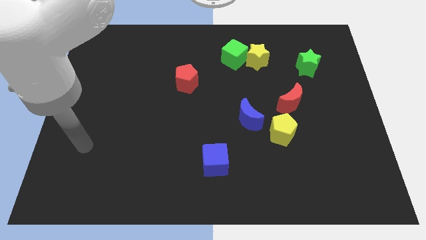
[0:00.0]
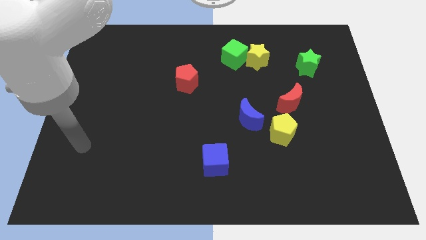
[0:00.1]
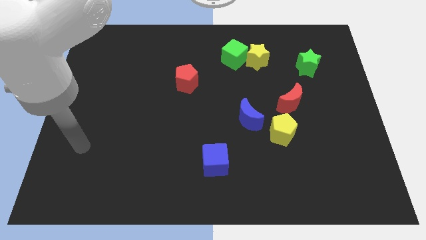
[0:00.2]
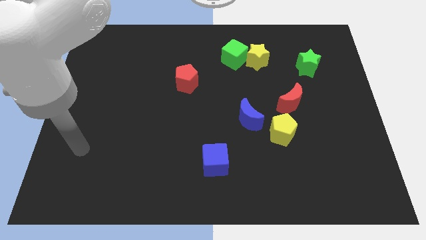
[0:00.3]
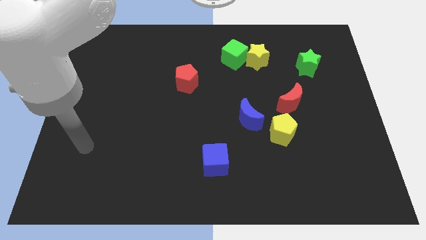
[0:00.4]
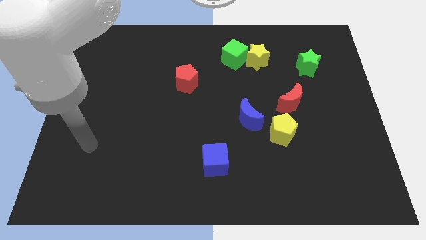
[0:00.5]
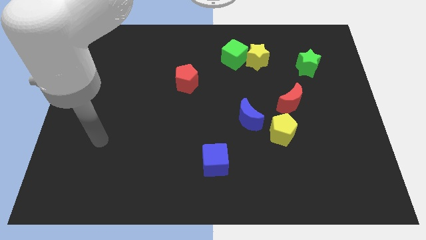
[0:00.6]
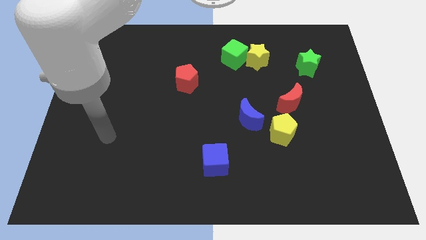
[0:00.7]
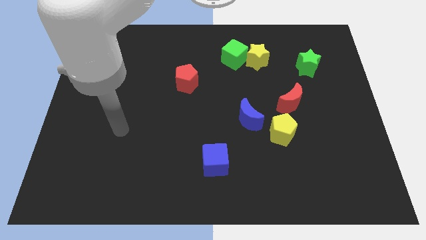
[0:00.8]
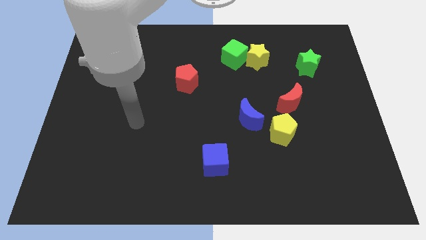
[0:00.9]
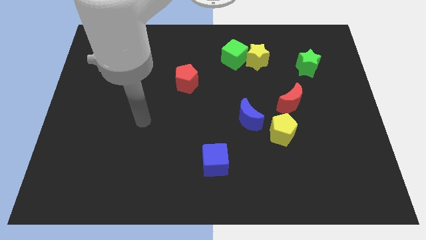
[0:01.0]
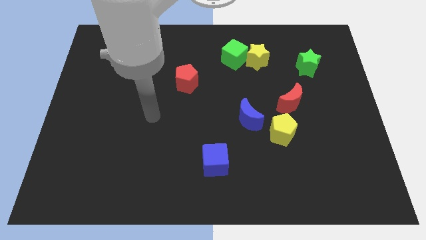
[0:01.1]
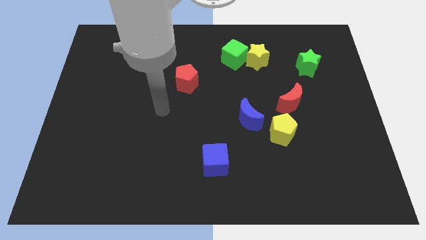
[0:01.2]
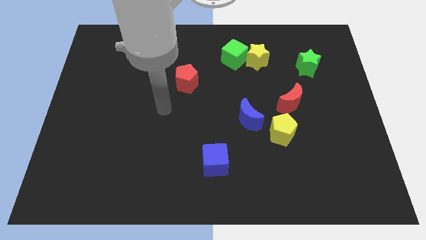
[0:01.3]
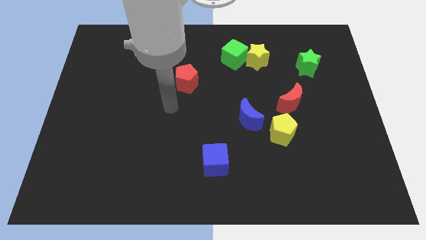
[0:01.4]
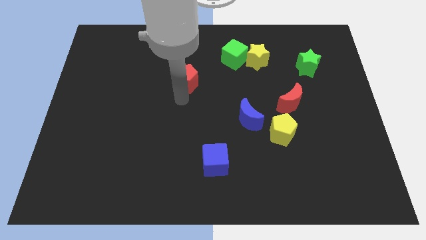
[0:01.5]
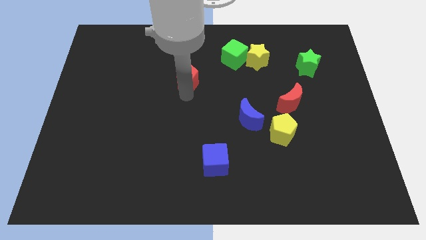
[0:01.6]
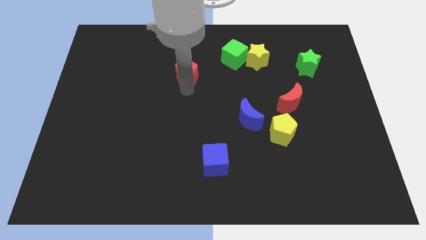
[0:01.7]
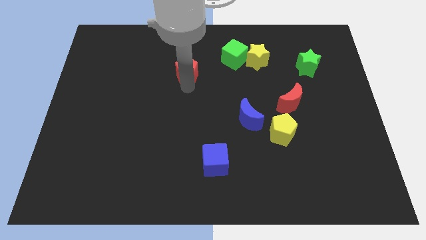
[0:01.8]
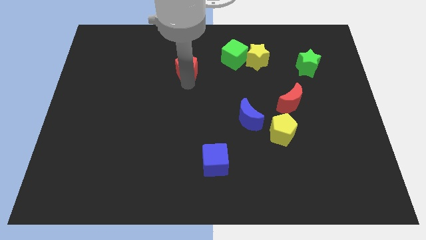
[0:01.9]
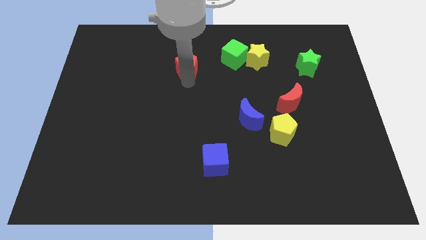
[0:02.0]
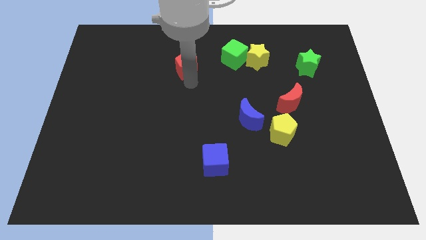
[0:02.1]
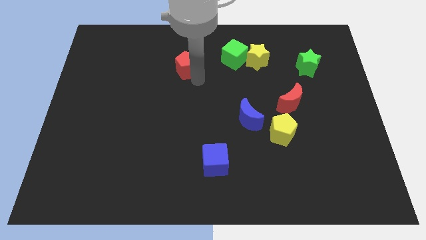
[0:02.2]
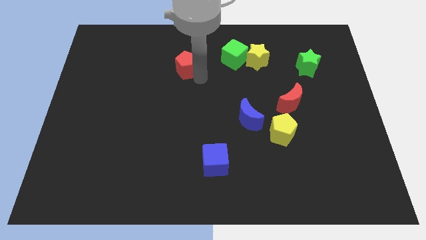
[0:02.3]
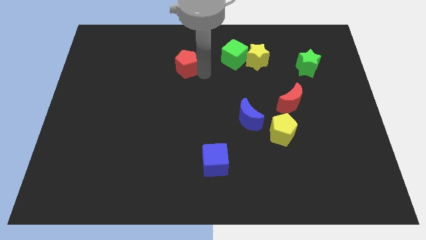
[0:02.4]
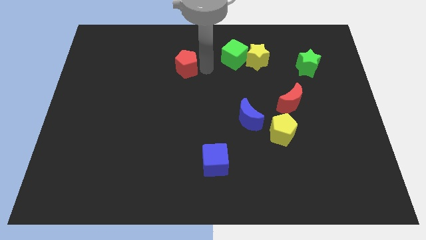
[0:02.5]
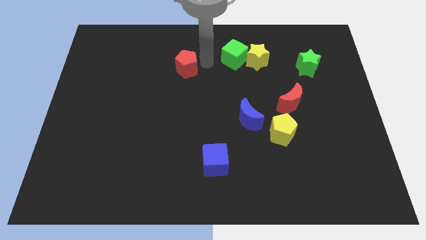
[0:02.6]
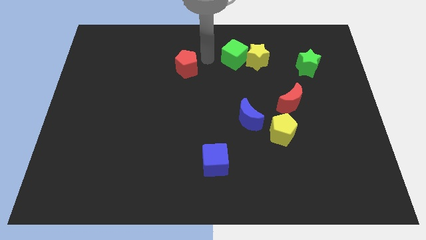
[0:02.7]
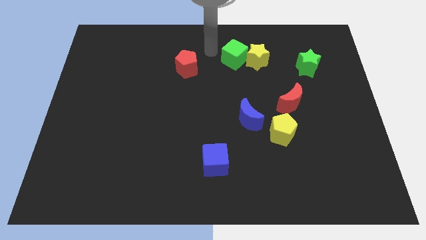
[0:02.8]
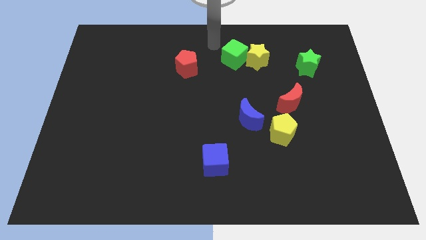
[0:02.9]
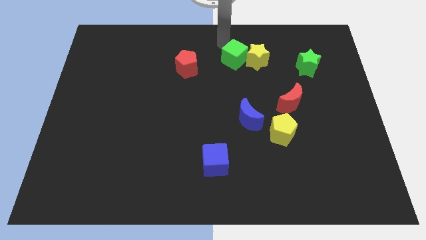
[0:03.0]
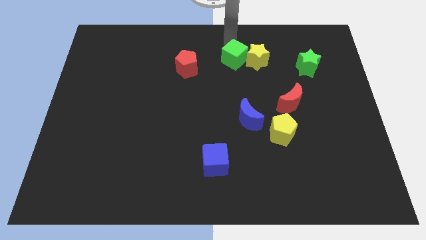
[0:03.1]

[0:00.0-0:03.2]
place red pentagon to the left of green cube

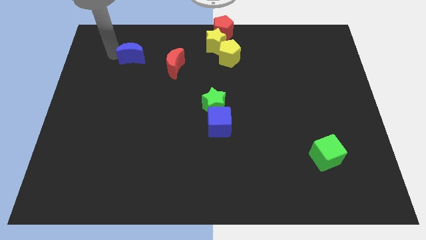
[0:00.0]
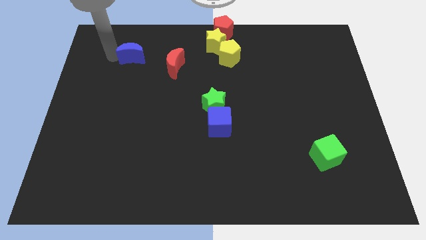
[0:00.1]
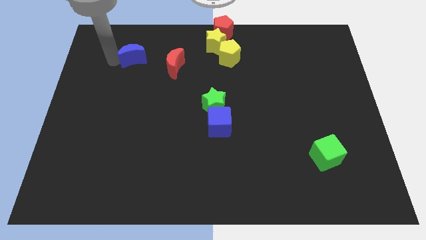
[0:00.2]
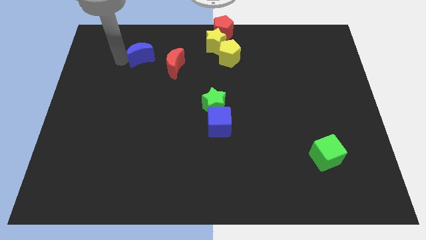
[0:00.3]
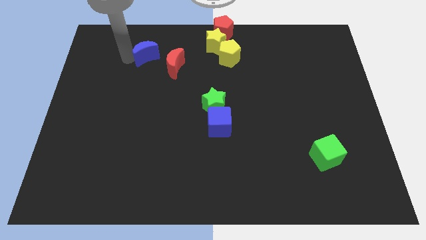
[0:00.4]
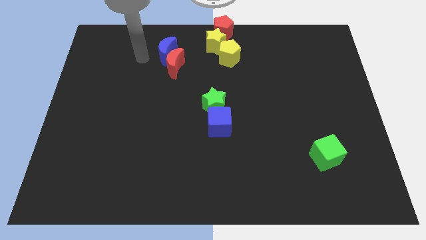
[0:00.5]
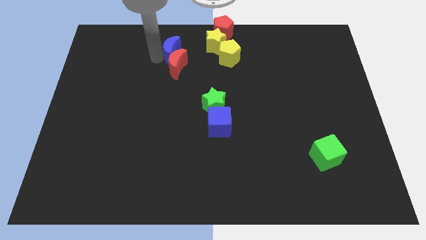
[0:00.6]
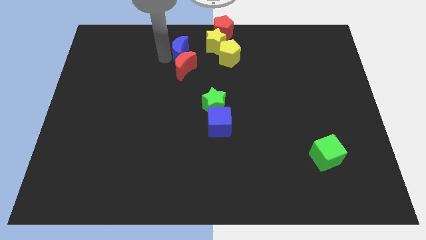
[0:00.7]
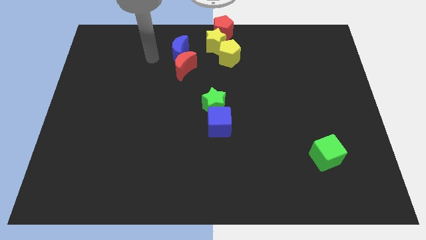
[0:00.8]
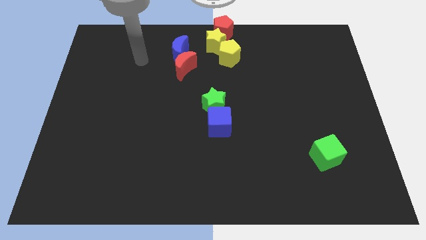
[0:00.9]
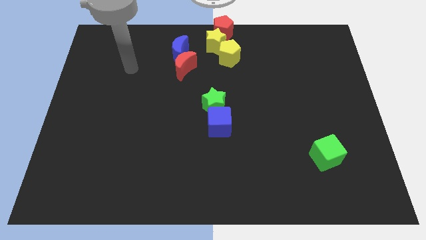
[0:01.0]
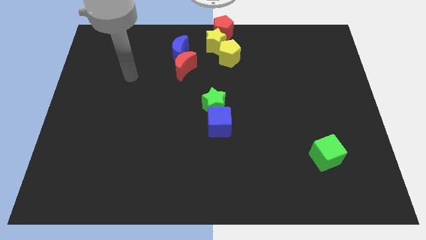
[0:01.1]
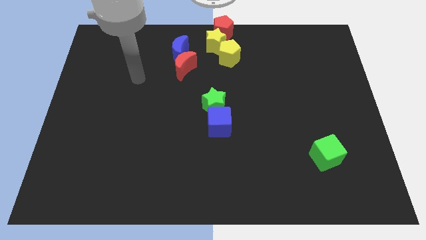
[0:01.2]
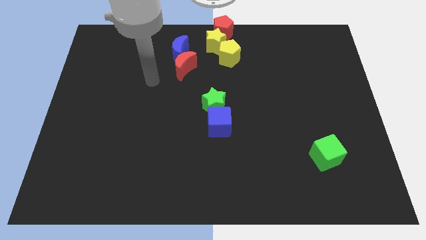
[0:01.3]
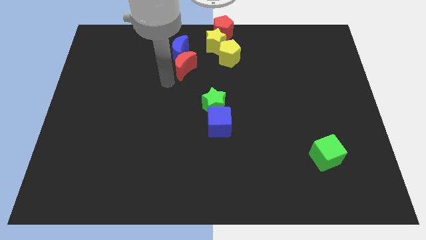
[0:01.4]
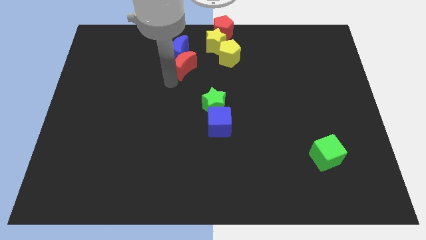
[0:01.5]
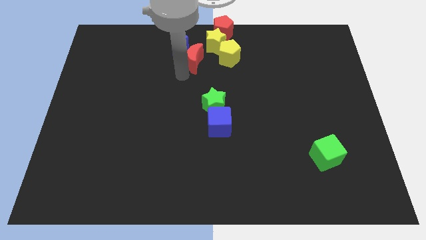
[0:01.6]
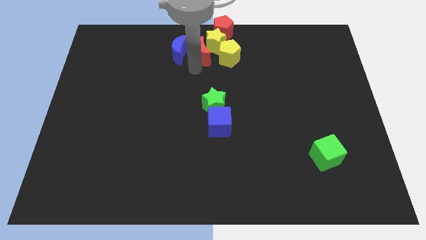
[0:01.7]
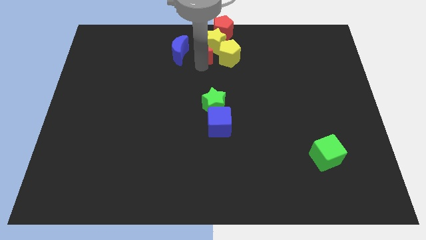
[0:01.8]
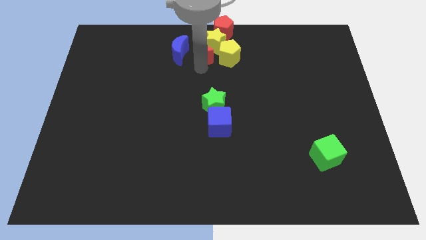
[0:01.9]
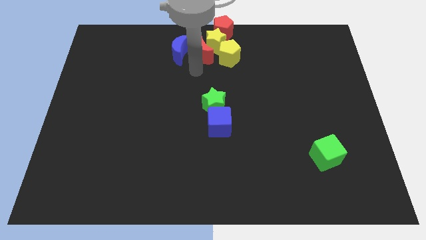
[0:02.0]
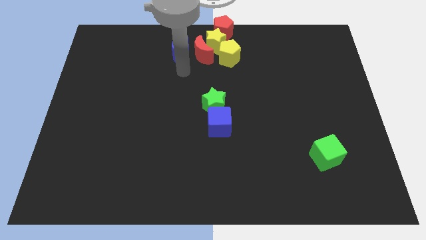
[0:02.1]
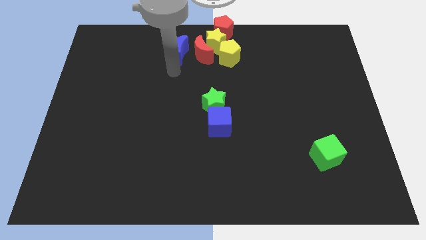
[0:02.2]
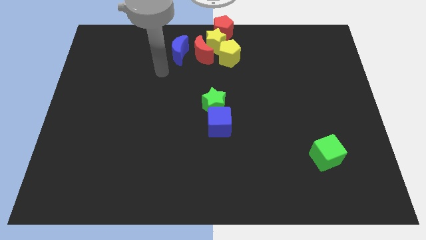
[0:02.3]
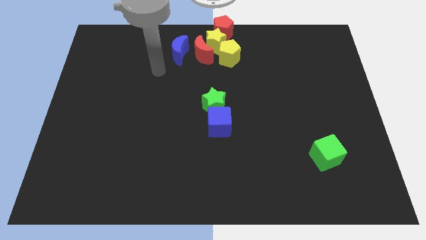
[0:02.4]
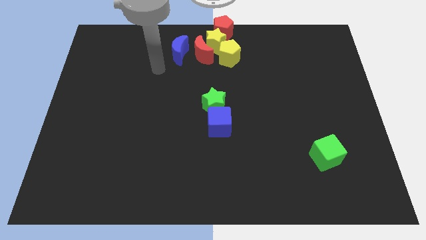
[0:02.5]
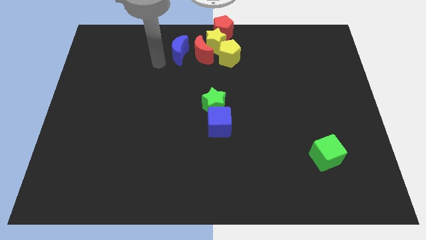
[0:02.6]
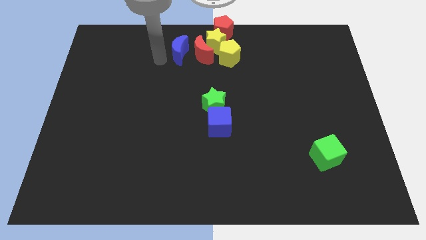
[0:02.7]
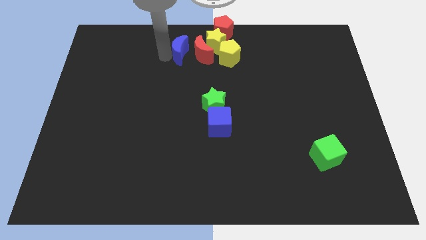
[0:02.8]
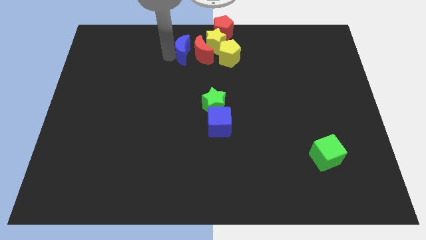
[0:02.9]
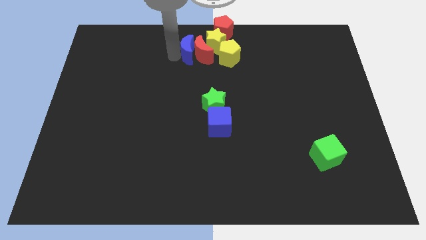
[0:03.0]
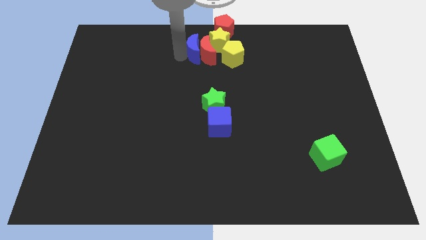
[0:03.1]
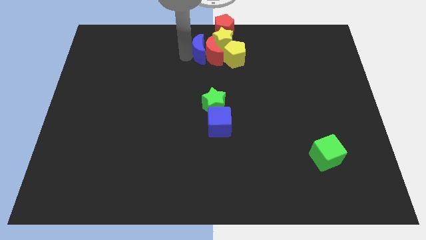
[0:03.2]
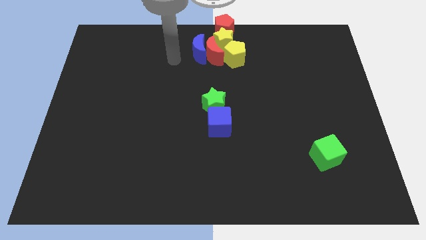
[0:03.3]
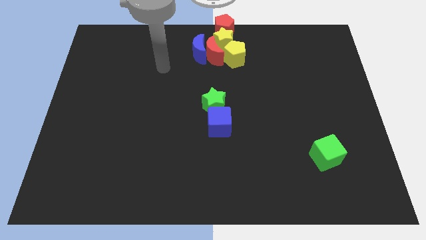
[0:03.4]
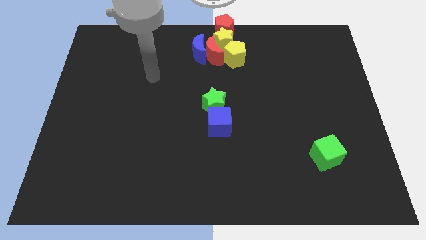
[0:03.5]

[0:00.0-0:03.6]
push the blue crescent towards the red crescent

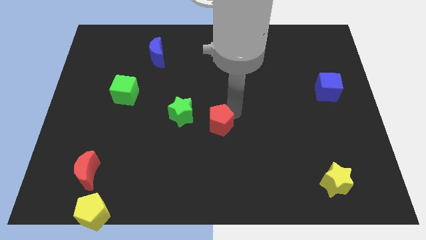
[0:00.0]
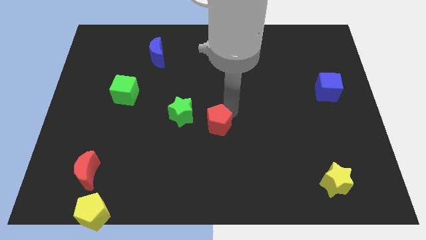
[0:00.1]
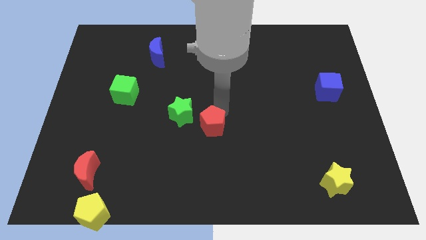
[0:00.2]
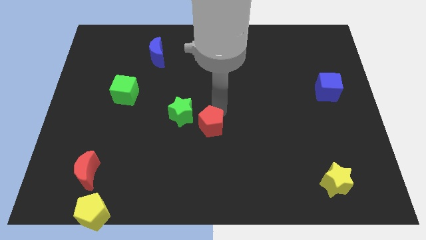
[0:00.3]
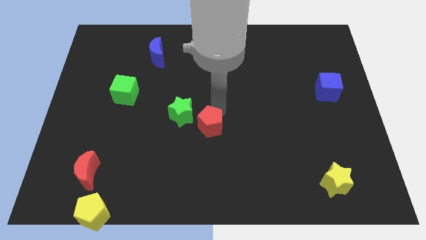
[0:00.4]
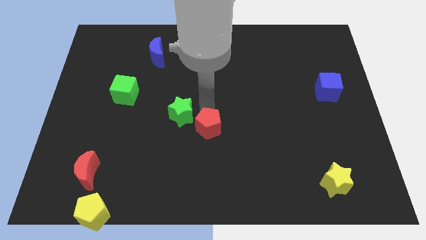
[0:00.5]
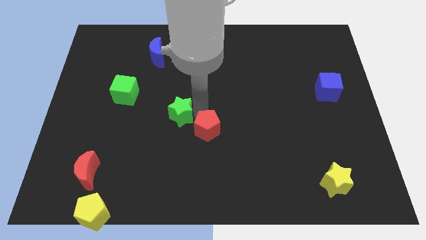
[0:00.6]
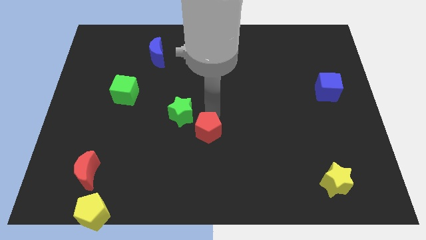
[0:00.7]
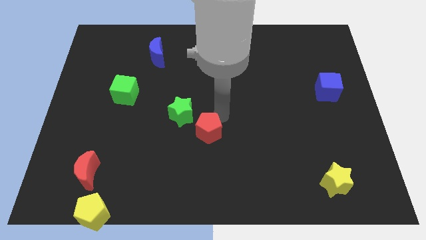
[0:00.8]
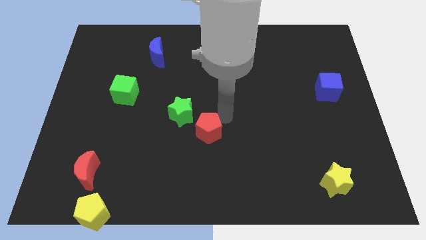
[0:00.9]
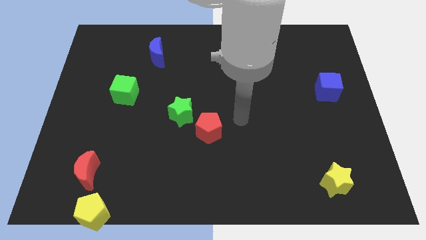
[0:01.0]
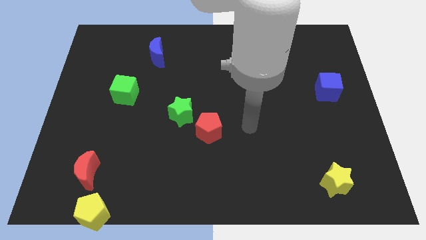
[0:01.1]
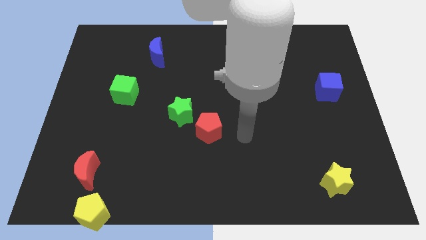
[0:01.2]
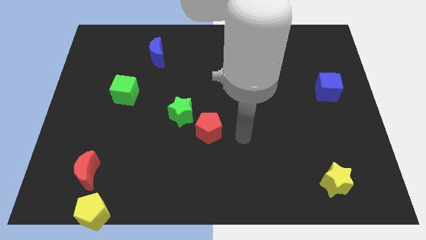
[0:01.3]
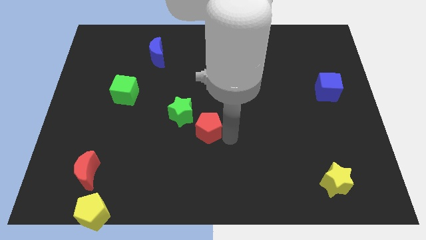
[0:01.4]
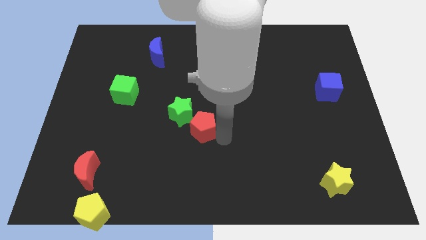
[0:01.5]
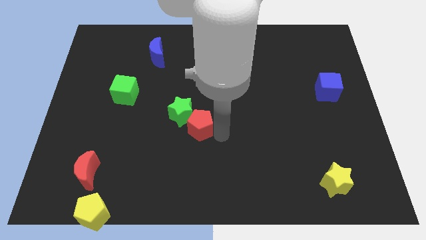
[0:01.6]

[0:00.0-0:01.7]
push red pentagon close to green star

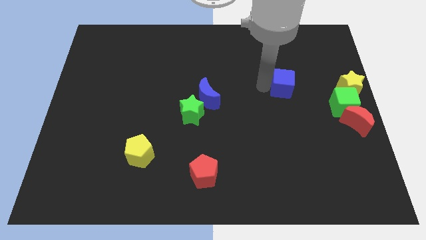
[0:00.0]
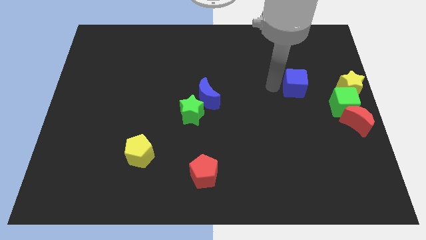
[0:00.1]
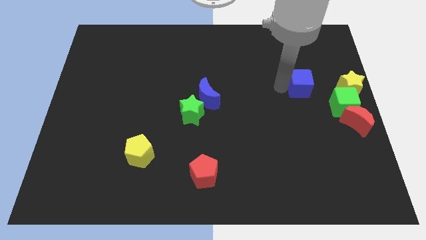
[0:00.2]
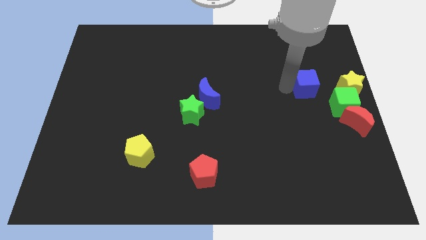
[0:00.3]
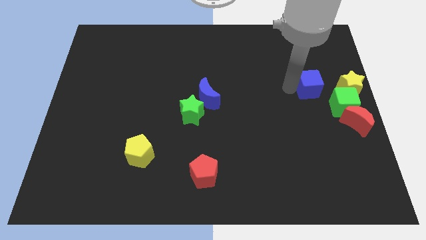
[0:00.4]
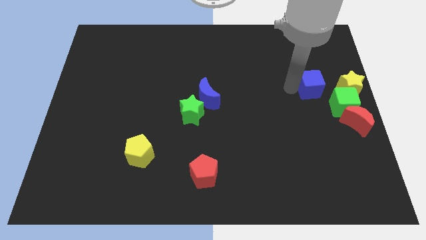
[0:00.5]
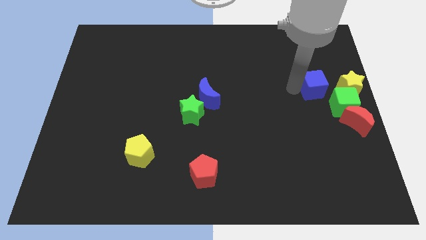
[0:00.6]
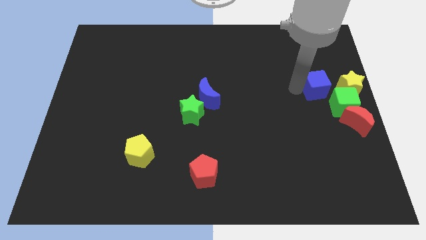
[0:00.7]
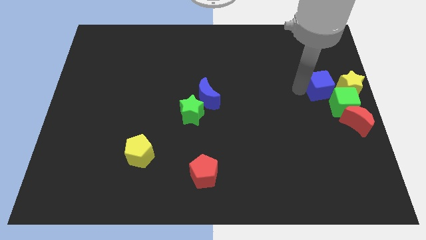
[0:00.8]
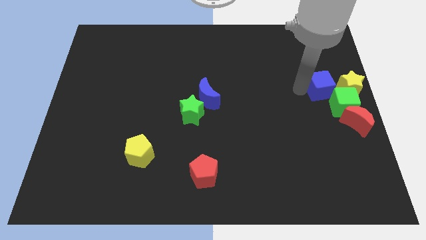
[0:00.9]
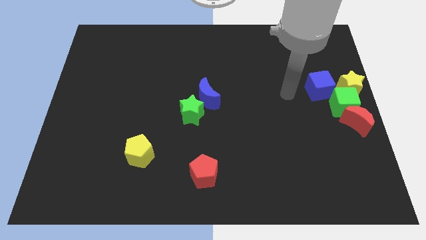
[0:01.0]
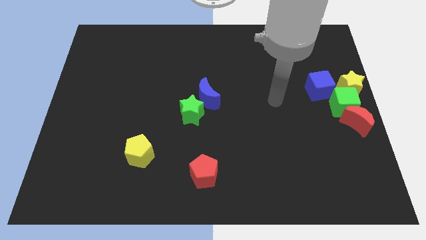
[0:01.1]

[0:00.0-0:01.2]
place the blue cube left to the yellow star
